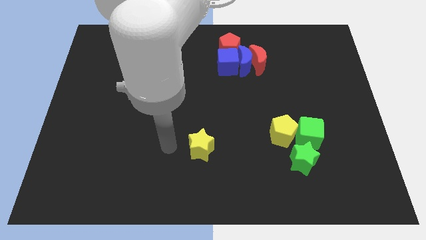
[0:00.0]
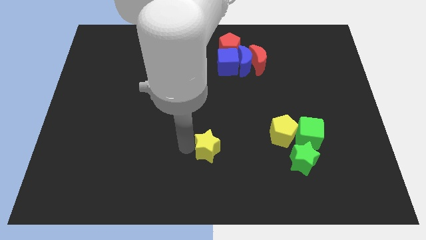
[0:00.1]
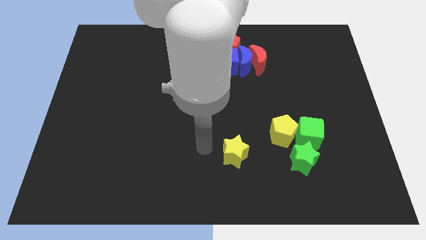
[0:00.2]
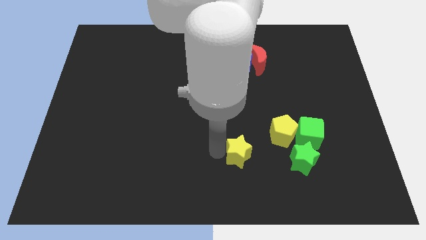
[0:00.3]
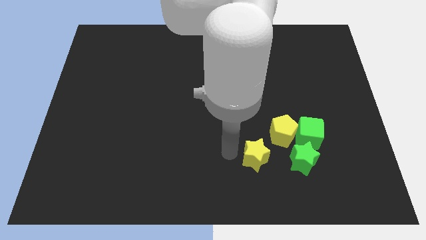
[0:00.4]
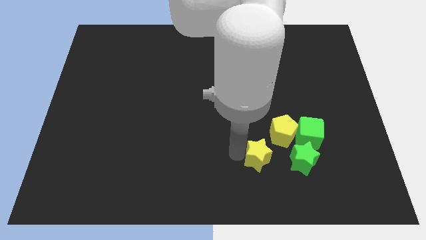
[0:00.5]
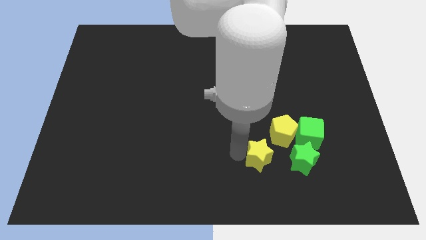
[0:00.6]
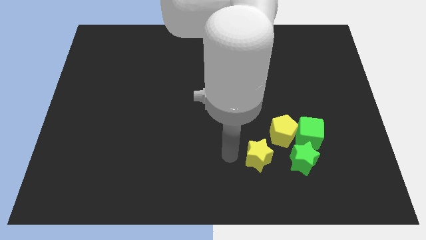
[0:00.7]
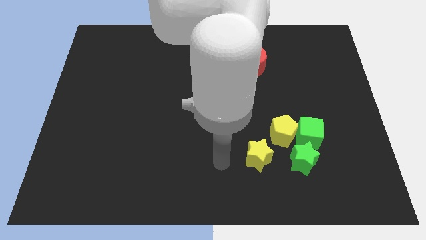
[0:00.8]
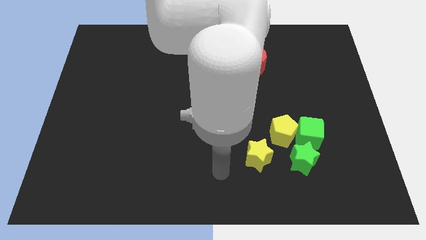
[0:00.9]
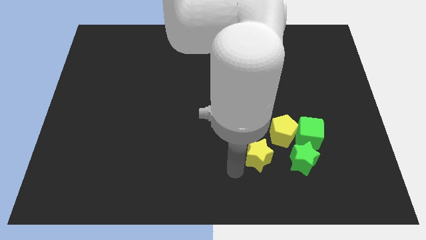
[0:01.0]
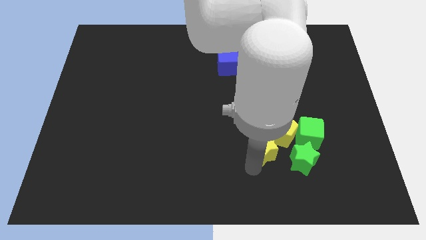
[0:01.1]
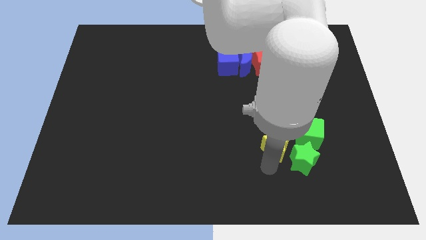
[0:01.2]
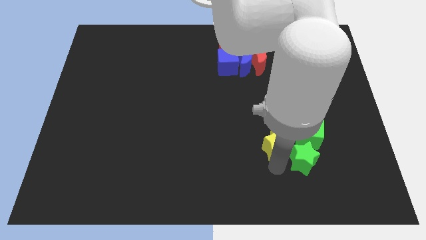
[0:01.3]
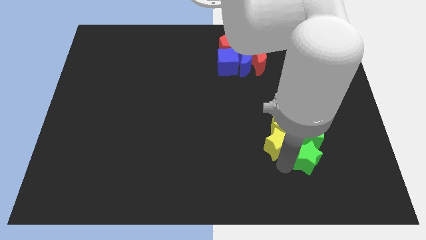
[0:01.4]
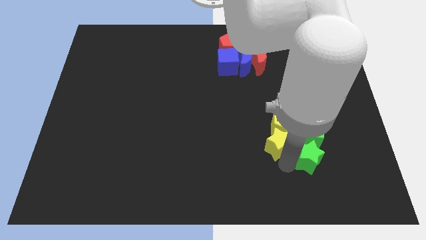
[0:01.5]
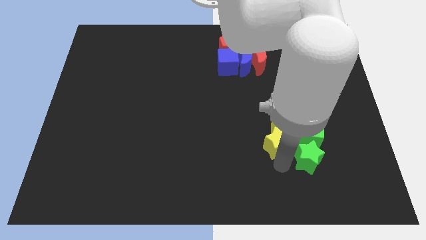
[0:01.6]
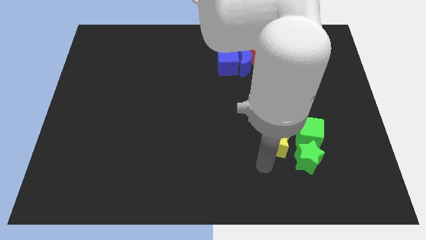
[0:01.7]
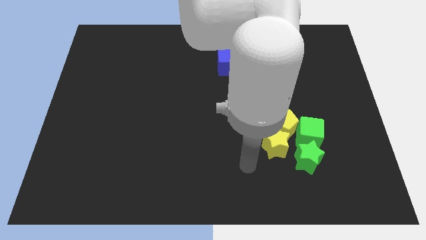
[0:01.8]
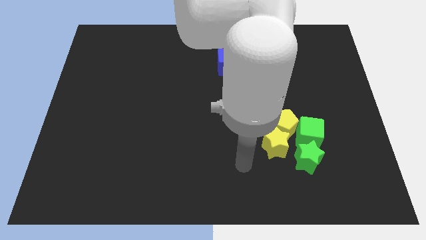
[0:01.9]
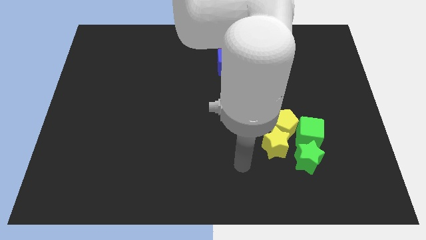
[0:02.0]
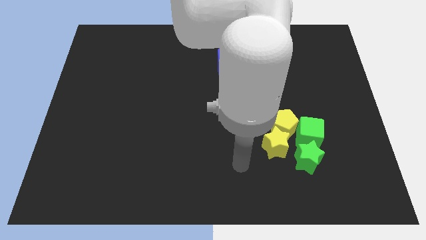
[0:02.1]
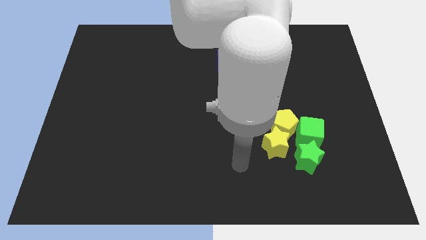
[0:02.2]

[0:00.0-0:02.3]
push the yellow star into the yellow pentagon

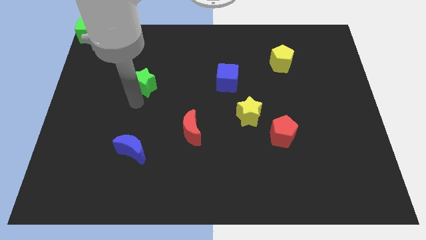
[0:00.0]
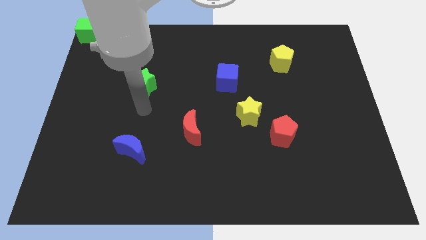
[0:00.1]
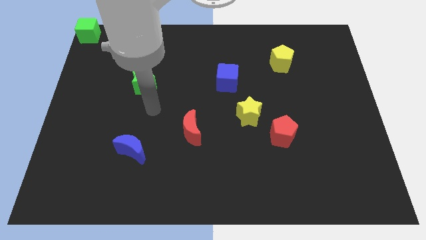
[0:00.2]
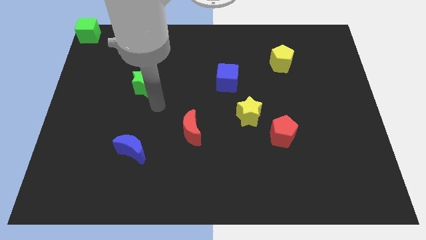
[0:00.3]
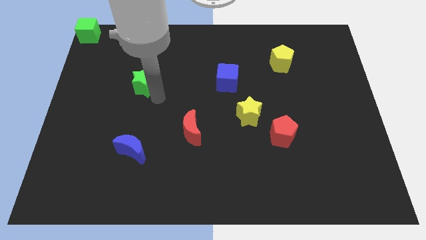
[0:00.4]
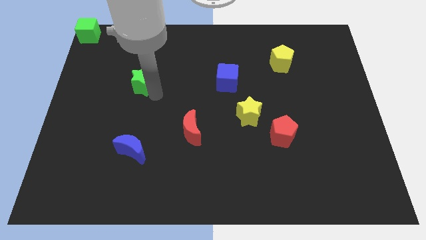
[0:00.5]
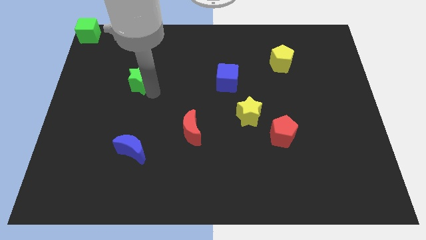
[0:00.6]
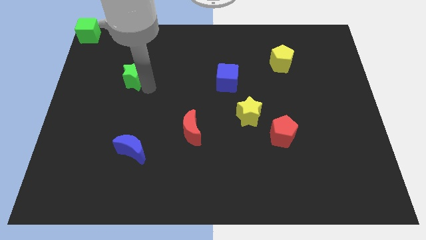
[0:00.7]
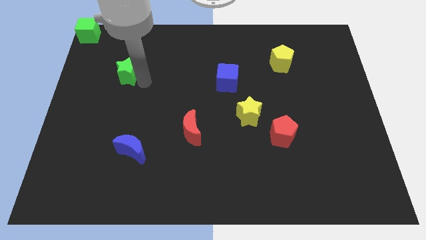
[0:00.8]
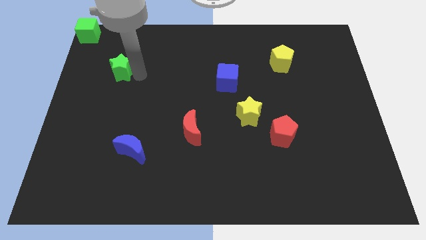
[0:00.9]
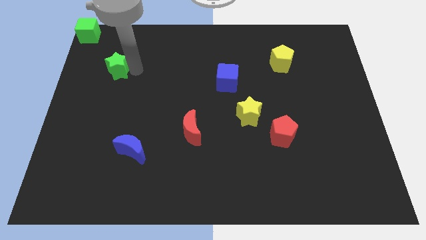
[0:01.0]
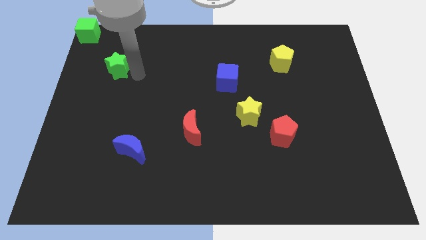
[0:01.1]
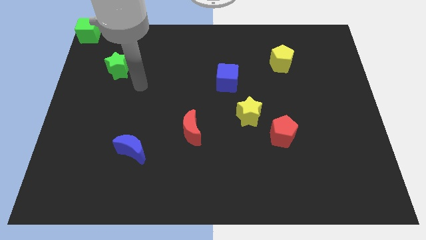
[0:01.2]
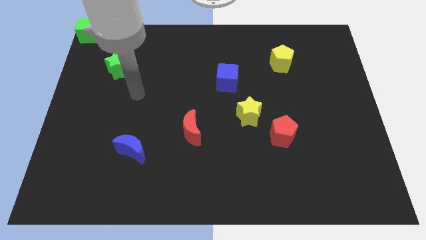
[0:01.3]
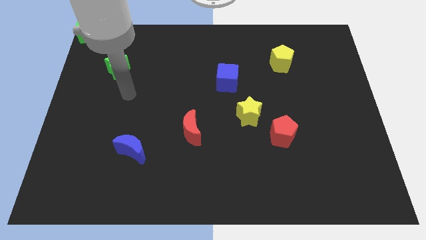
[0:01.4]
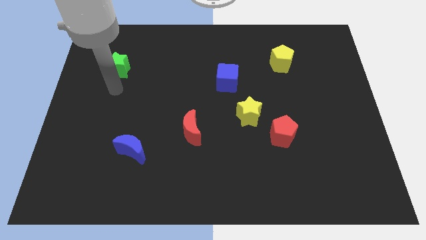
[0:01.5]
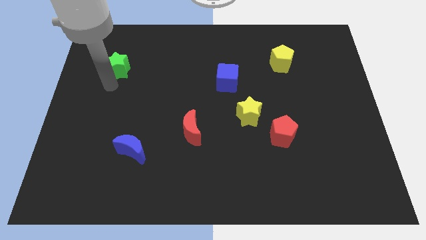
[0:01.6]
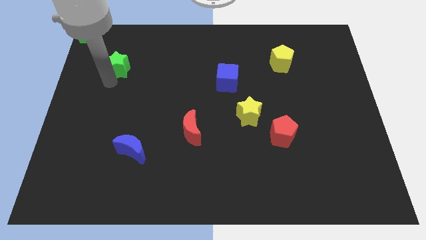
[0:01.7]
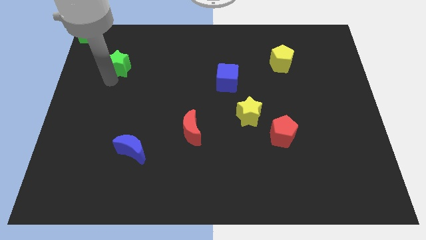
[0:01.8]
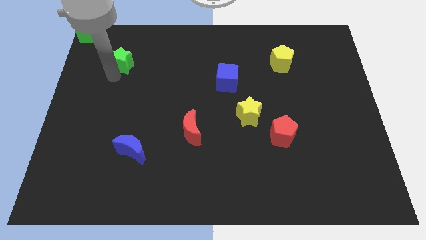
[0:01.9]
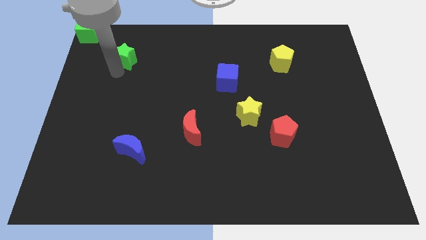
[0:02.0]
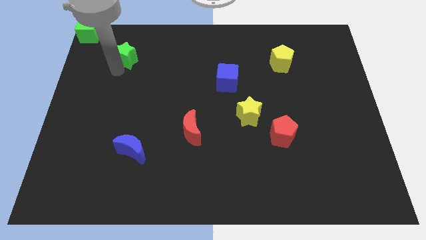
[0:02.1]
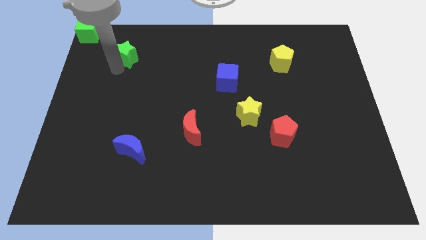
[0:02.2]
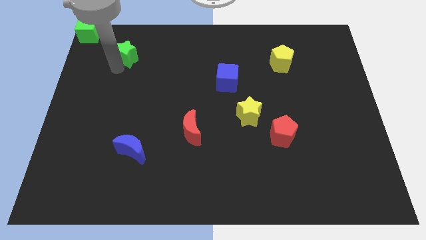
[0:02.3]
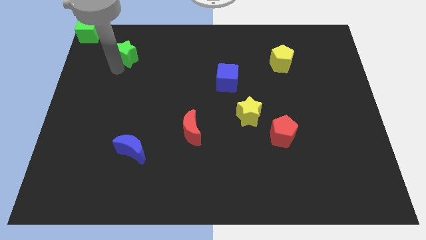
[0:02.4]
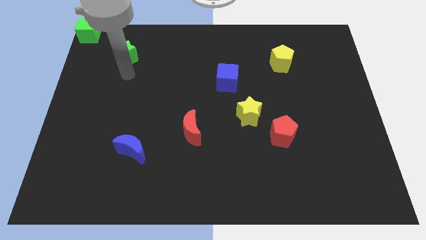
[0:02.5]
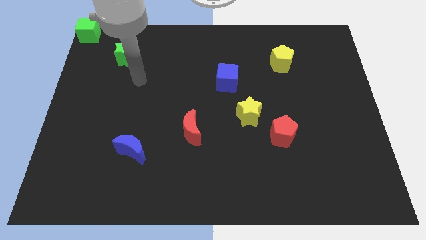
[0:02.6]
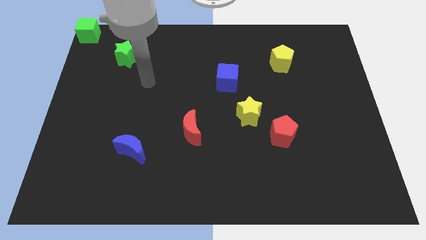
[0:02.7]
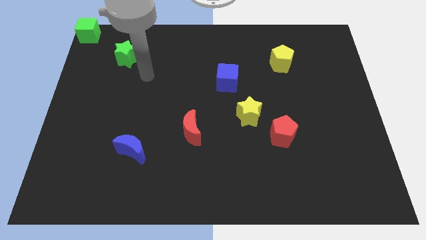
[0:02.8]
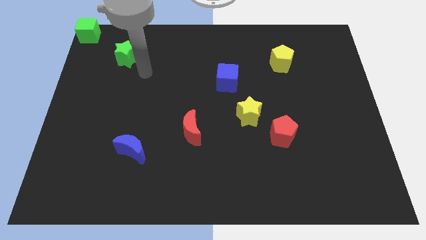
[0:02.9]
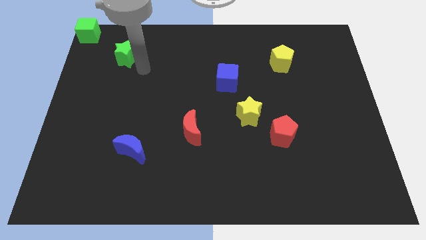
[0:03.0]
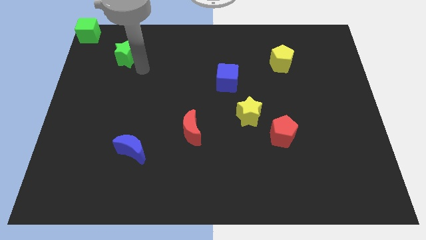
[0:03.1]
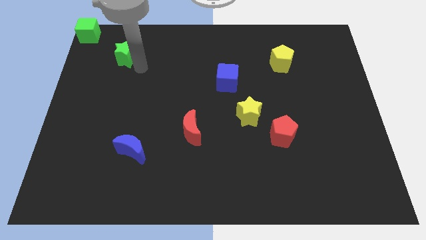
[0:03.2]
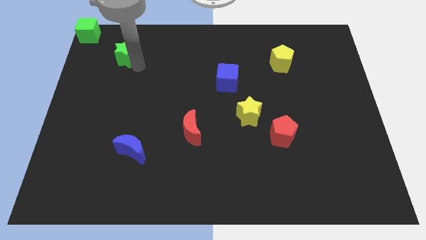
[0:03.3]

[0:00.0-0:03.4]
push the green star to the top center

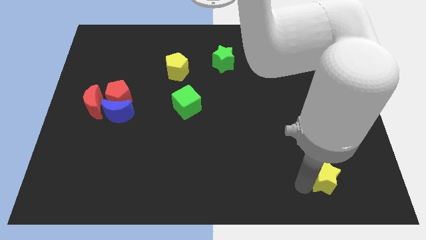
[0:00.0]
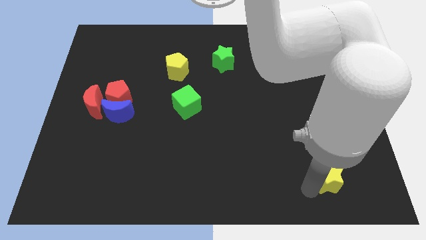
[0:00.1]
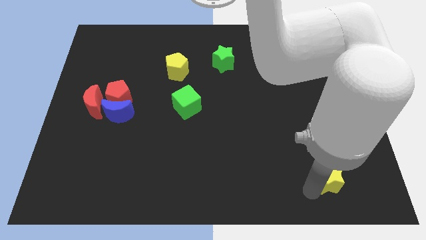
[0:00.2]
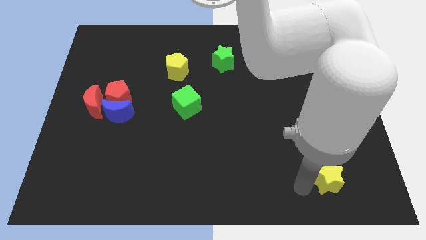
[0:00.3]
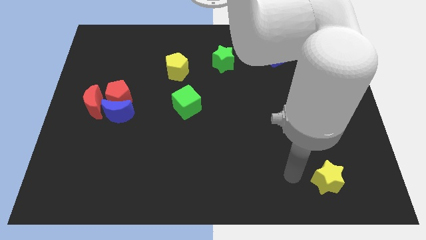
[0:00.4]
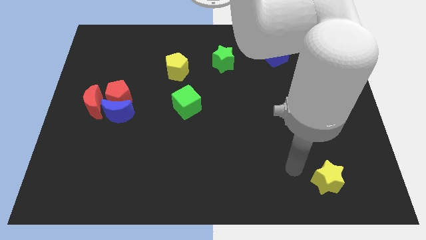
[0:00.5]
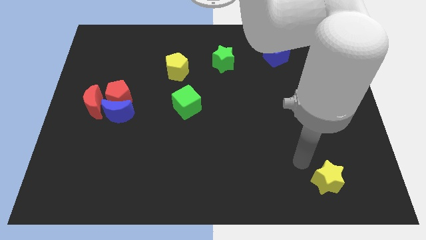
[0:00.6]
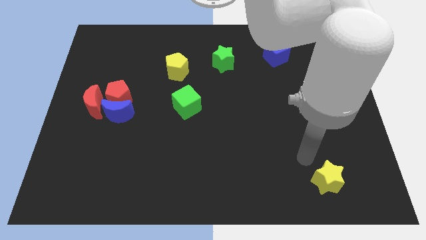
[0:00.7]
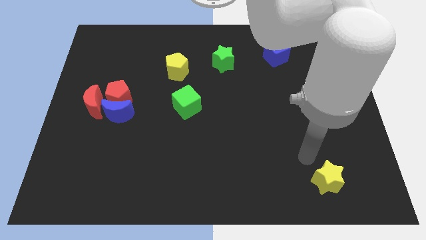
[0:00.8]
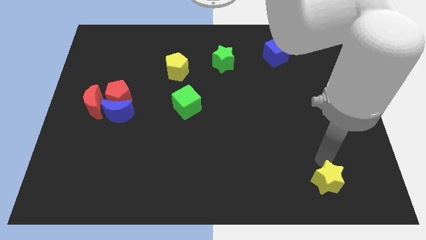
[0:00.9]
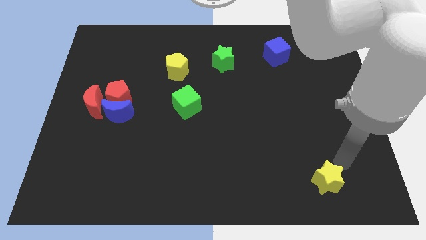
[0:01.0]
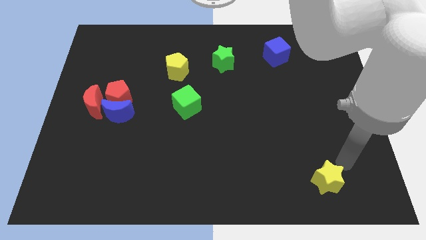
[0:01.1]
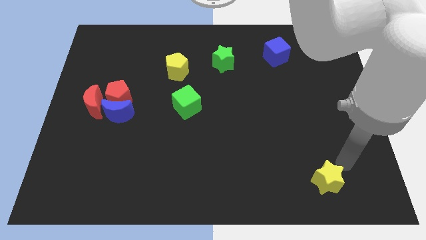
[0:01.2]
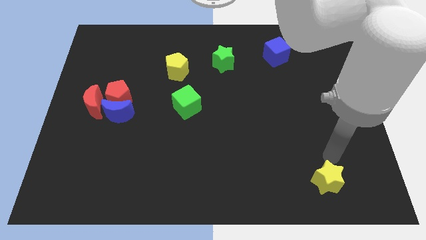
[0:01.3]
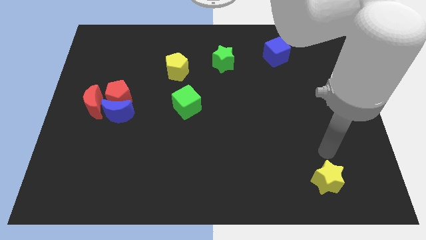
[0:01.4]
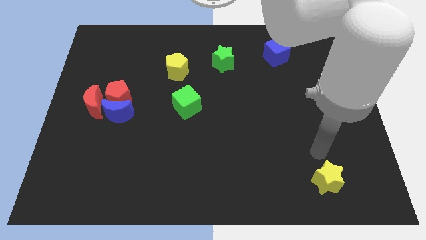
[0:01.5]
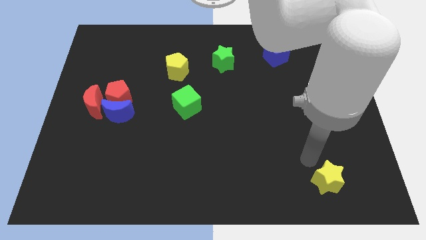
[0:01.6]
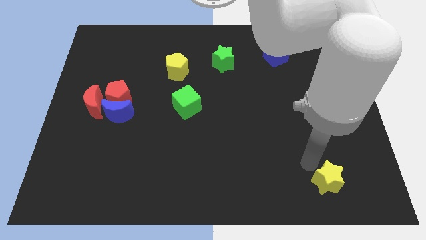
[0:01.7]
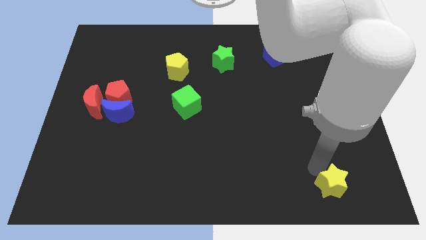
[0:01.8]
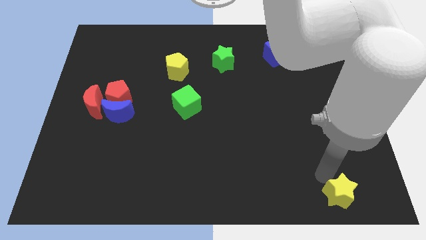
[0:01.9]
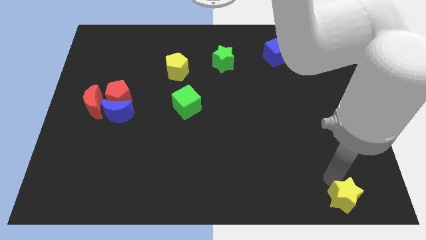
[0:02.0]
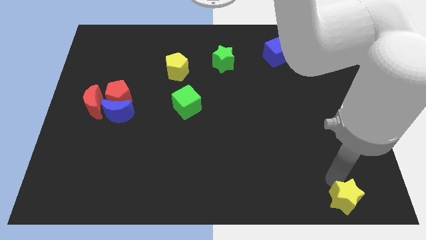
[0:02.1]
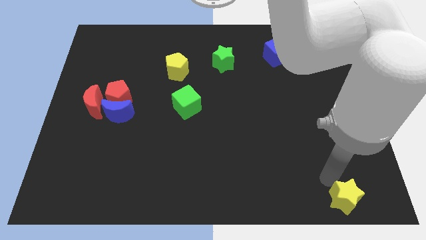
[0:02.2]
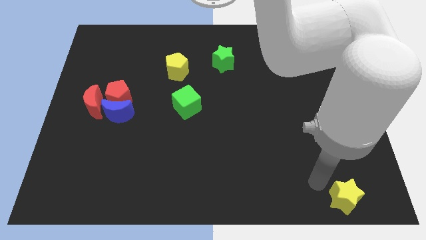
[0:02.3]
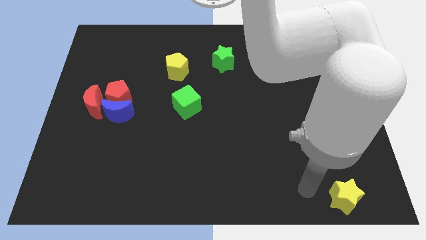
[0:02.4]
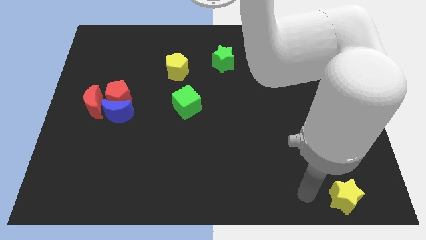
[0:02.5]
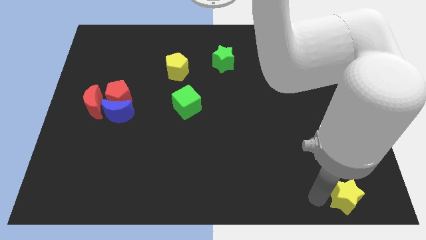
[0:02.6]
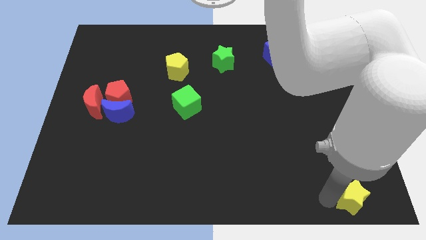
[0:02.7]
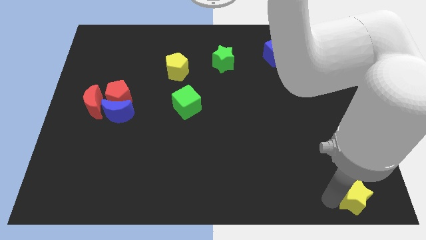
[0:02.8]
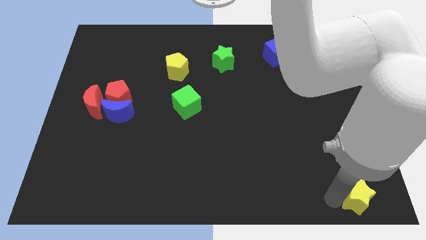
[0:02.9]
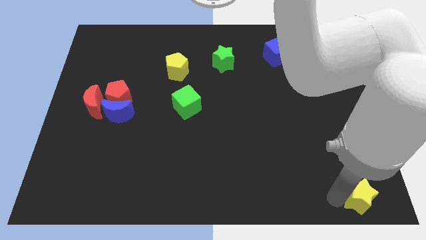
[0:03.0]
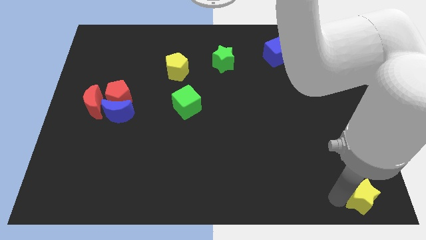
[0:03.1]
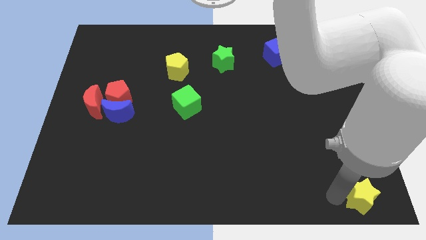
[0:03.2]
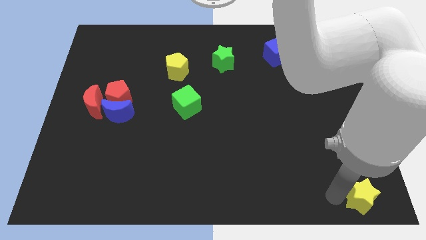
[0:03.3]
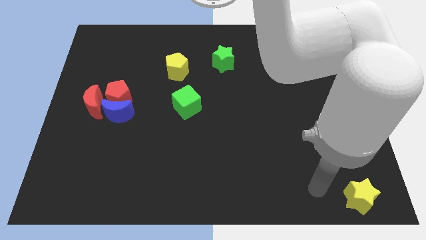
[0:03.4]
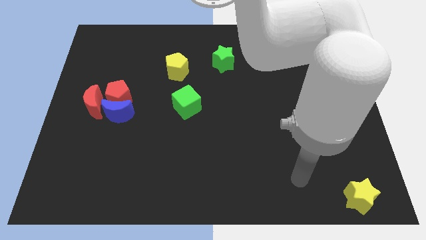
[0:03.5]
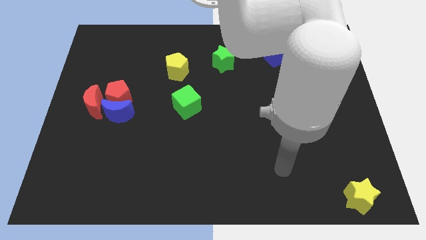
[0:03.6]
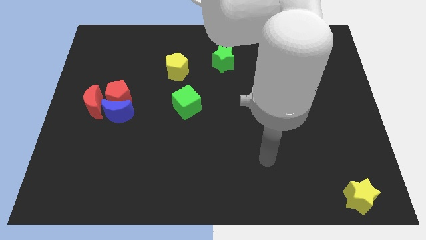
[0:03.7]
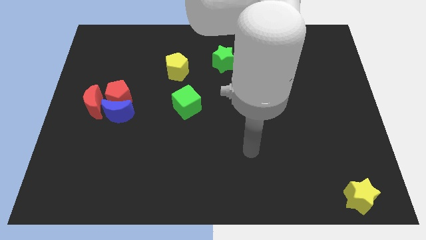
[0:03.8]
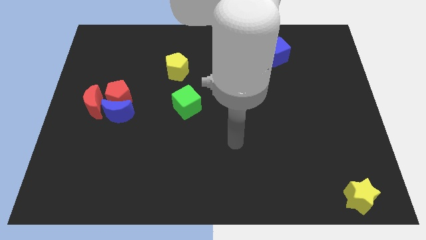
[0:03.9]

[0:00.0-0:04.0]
place the yellow star to the bottom right of the board
